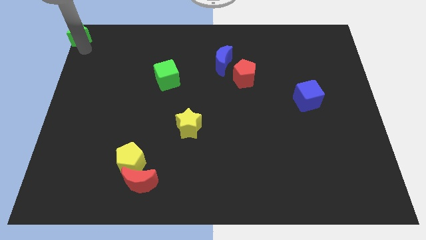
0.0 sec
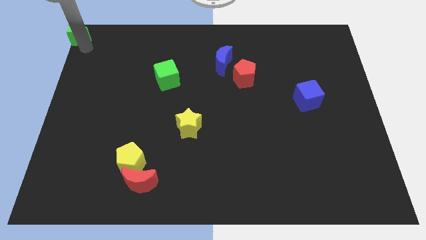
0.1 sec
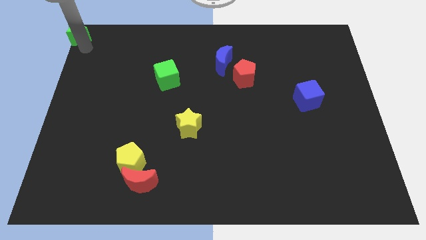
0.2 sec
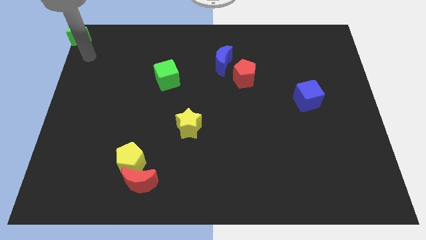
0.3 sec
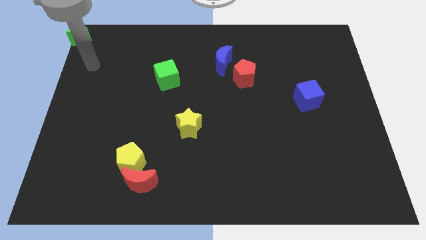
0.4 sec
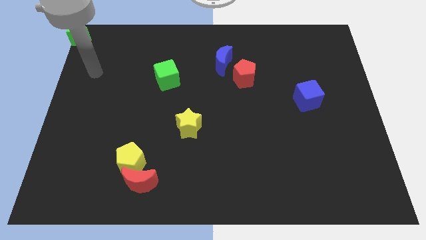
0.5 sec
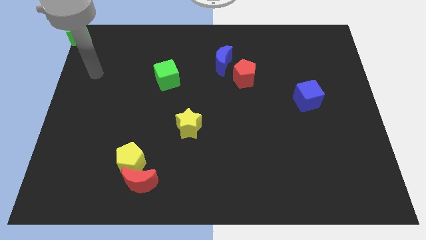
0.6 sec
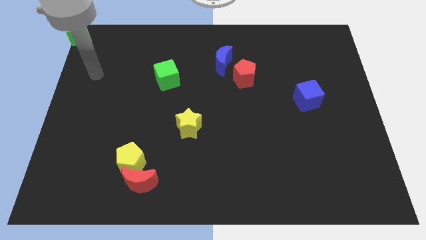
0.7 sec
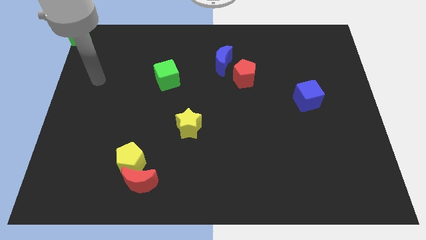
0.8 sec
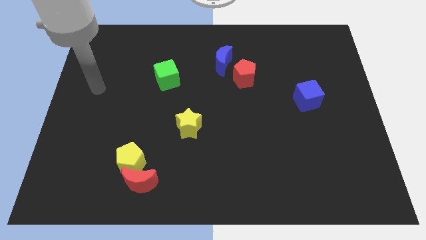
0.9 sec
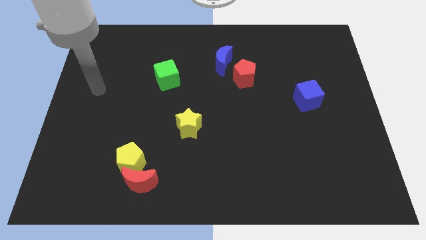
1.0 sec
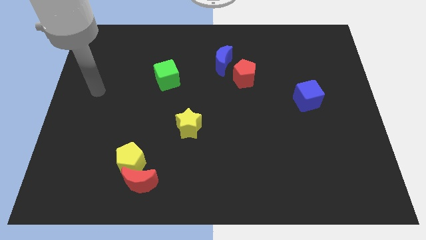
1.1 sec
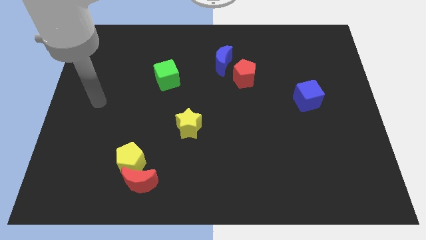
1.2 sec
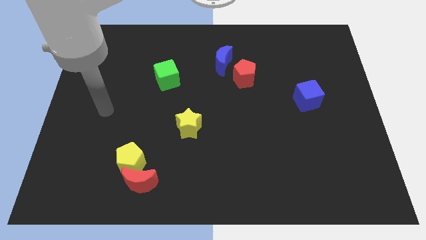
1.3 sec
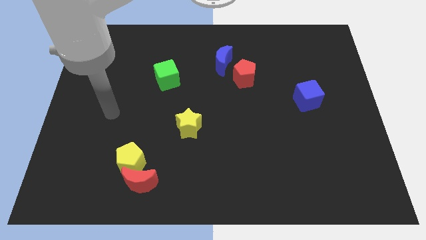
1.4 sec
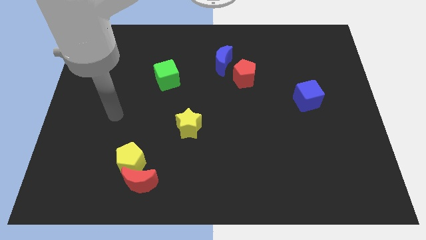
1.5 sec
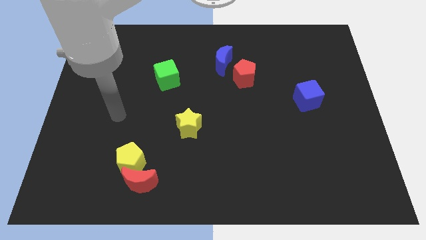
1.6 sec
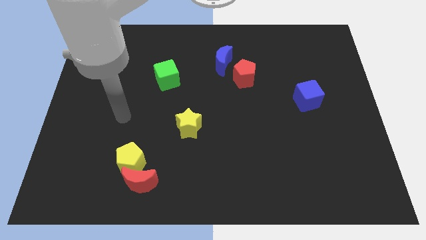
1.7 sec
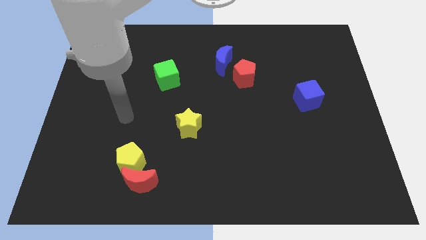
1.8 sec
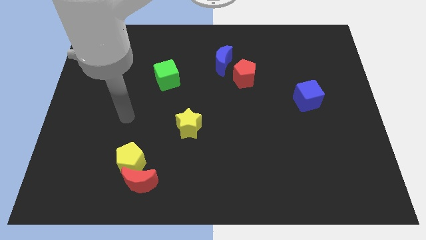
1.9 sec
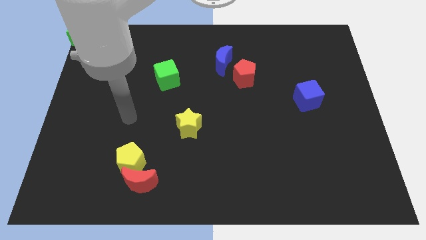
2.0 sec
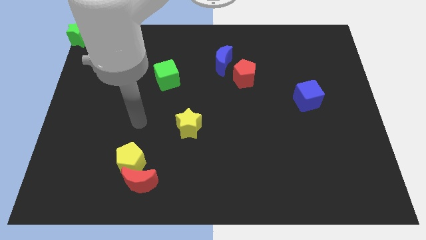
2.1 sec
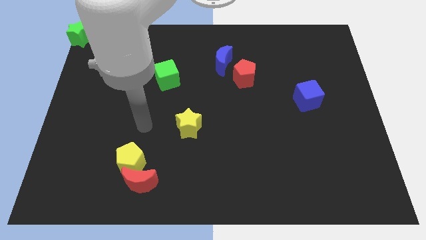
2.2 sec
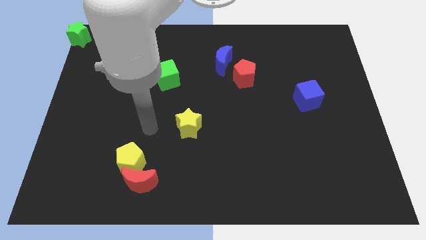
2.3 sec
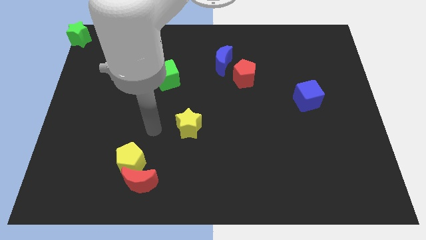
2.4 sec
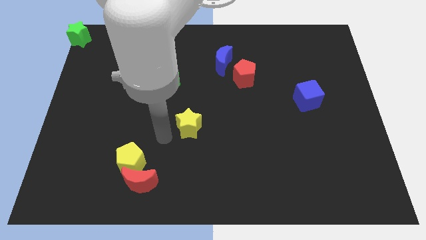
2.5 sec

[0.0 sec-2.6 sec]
place your arm to the left of yellow star

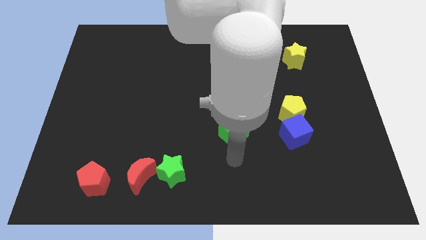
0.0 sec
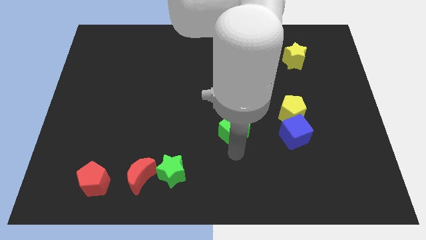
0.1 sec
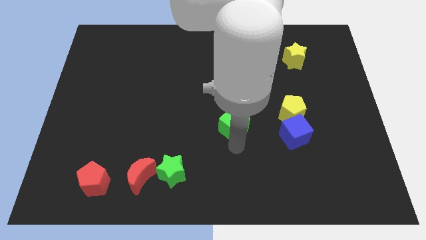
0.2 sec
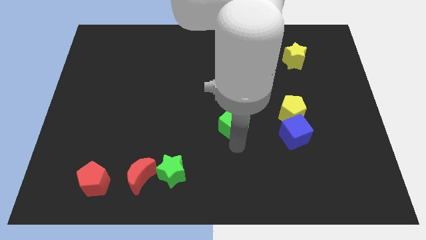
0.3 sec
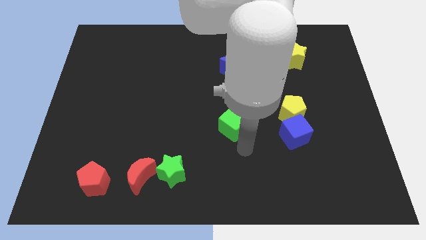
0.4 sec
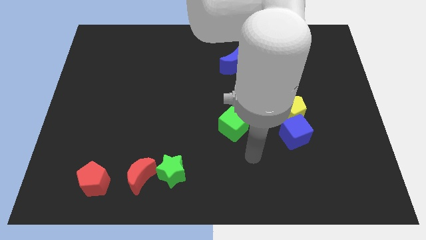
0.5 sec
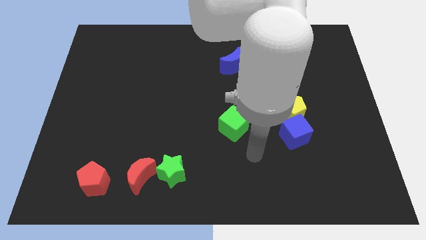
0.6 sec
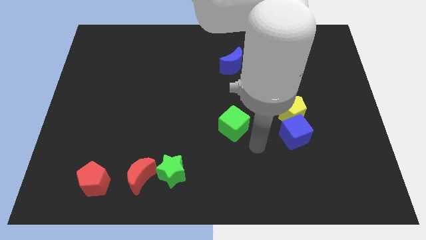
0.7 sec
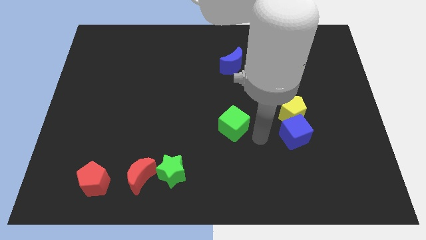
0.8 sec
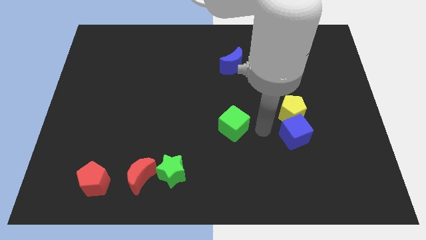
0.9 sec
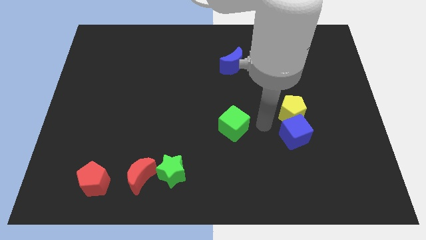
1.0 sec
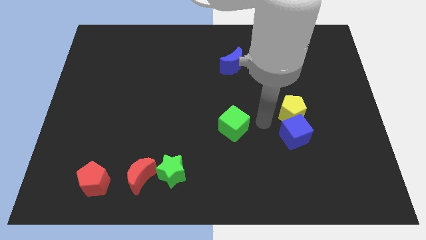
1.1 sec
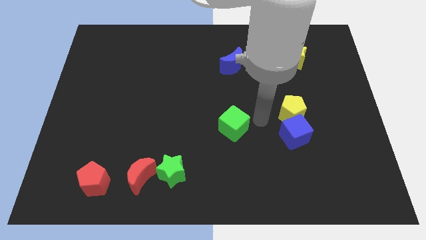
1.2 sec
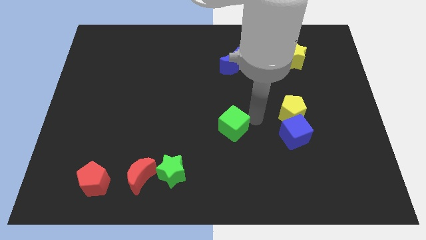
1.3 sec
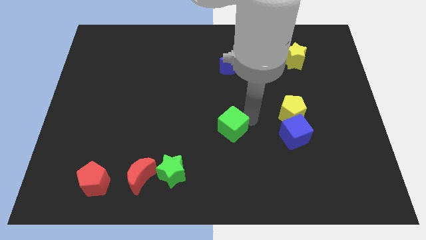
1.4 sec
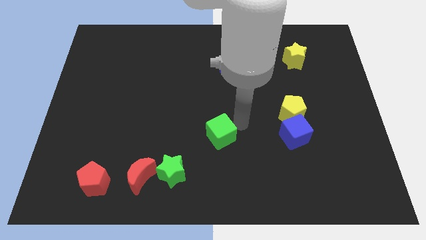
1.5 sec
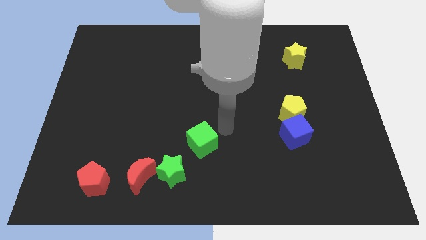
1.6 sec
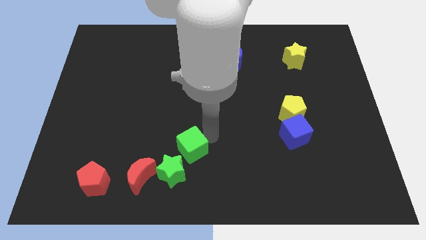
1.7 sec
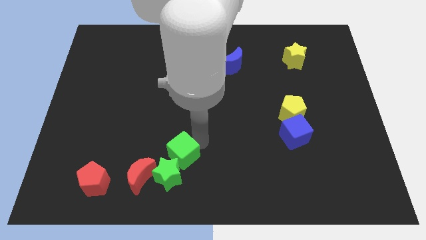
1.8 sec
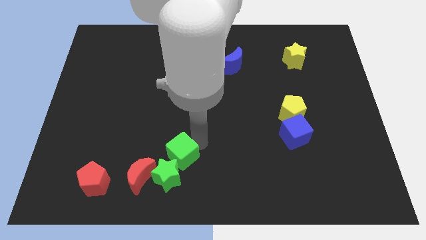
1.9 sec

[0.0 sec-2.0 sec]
move the green cube into the green star

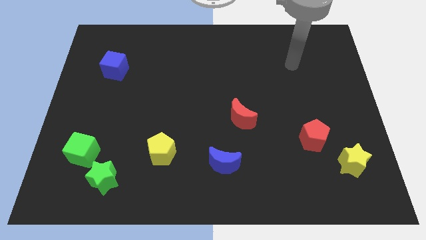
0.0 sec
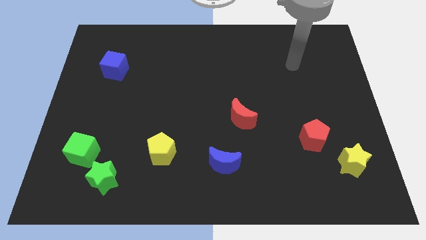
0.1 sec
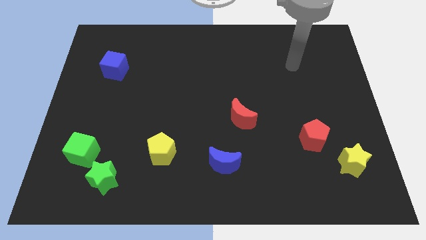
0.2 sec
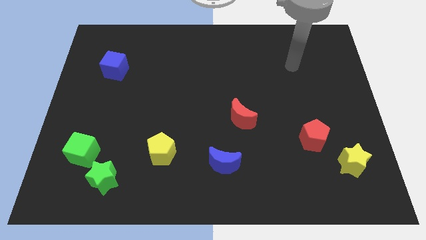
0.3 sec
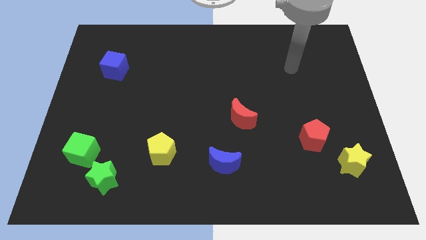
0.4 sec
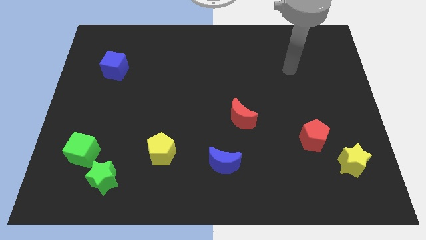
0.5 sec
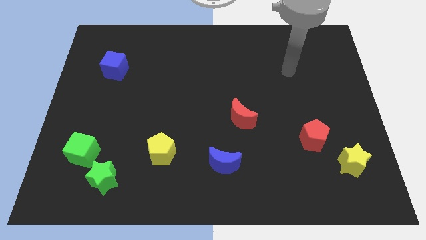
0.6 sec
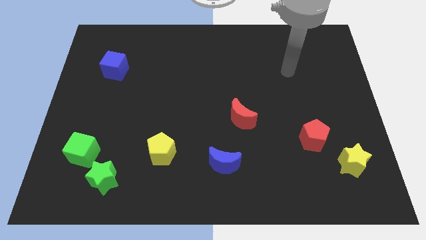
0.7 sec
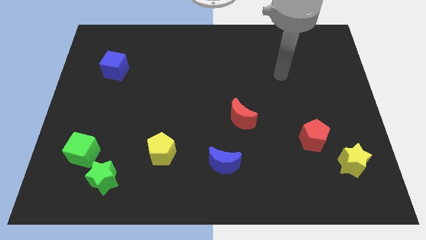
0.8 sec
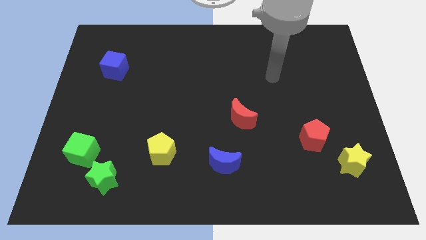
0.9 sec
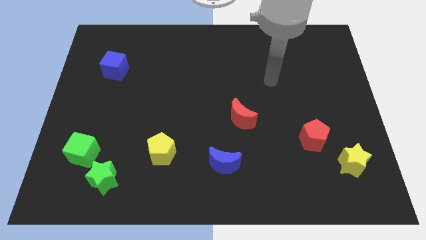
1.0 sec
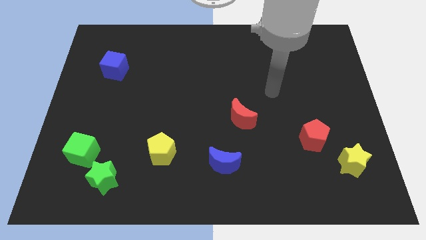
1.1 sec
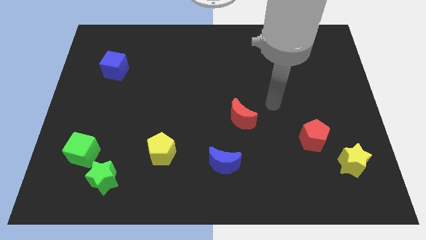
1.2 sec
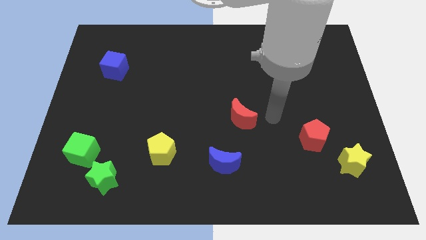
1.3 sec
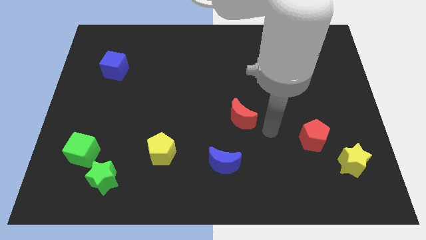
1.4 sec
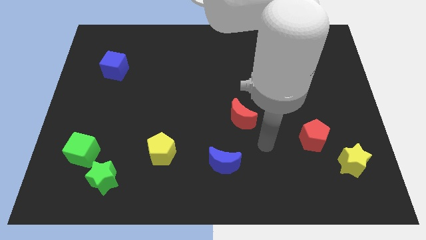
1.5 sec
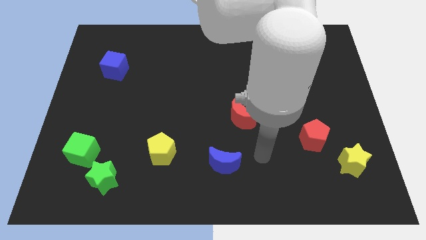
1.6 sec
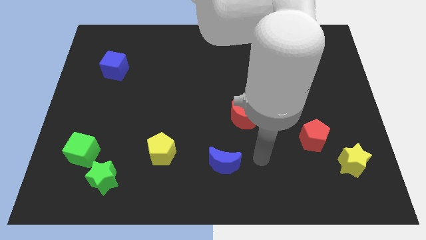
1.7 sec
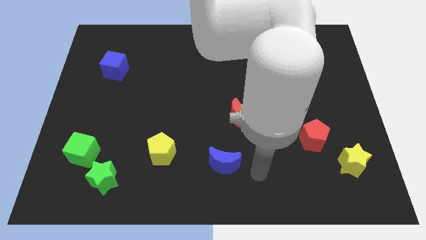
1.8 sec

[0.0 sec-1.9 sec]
move your arm towards the bottom of the board

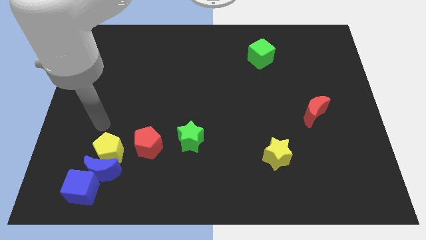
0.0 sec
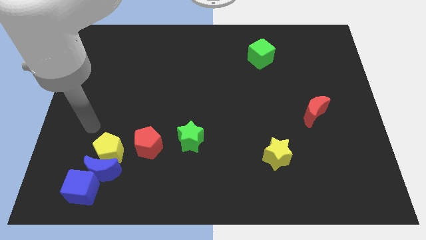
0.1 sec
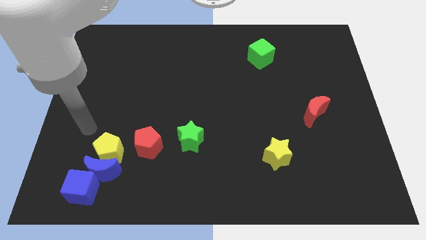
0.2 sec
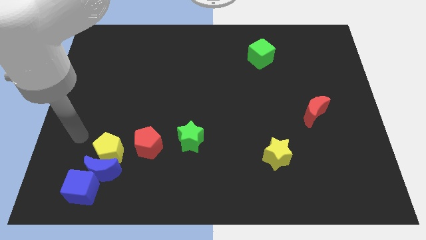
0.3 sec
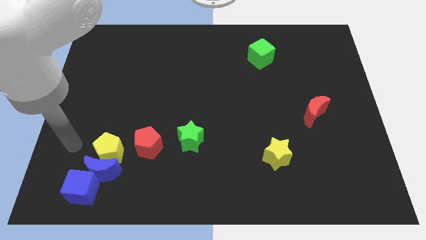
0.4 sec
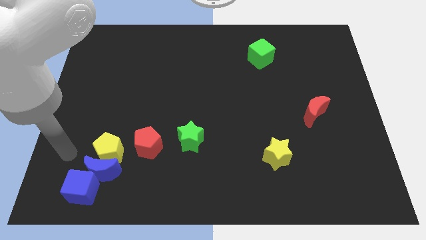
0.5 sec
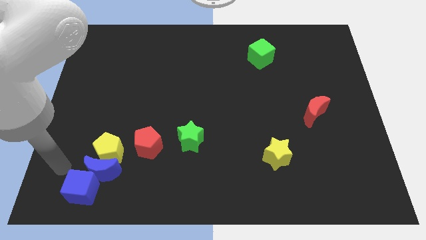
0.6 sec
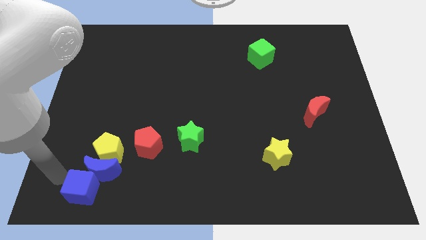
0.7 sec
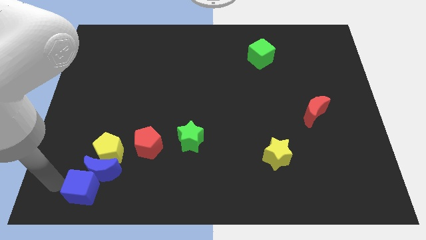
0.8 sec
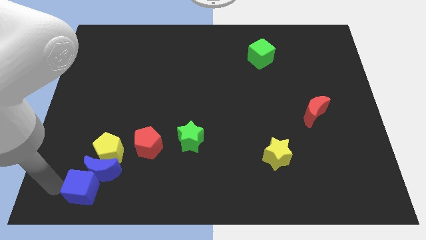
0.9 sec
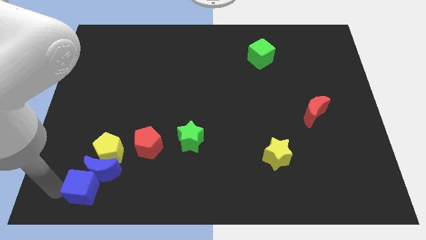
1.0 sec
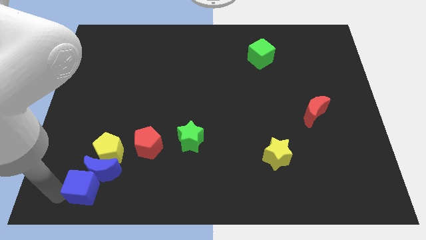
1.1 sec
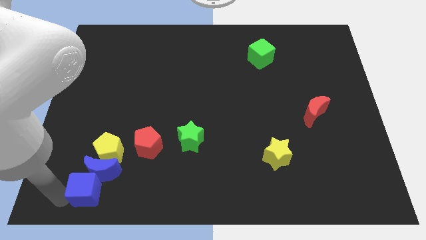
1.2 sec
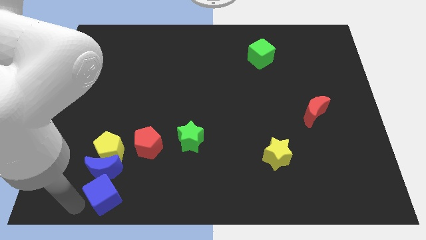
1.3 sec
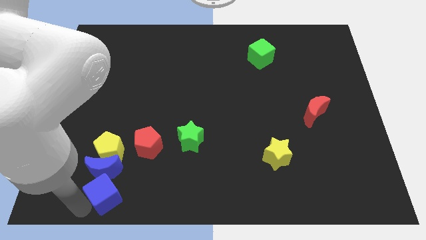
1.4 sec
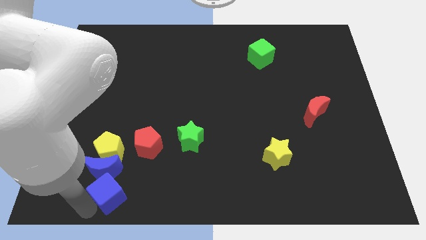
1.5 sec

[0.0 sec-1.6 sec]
push the blue cube slightly to the right

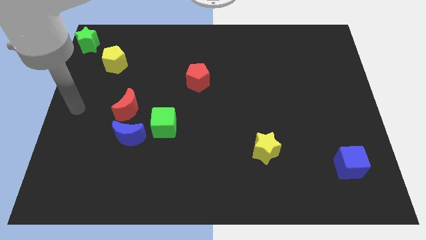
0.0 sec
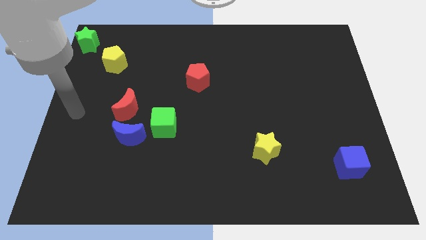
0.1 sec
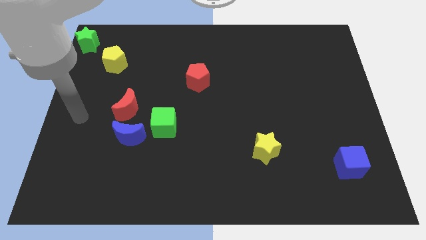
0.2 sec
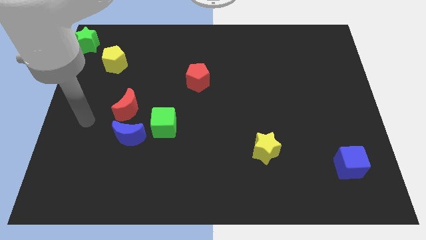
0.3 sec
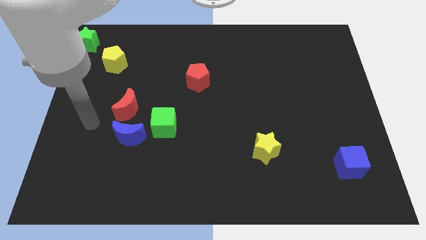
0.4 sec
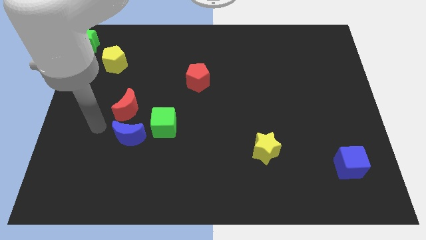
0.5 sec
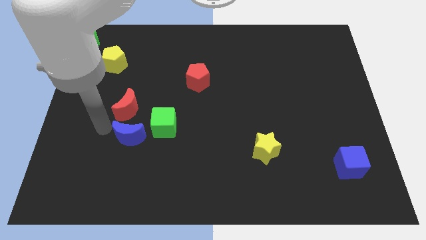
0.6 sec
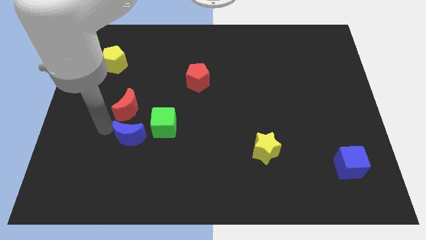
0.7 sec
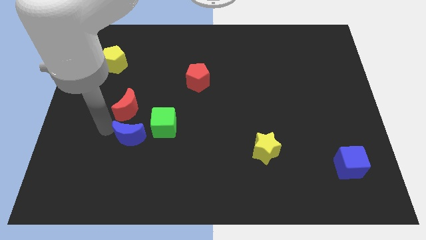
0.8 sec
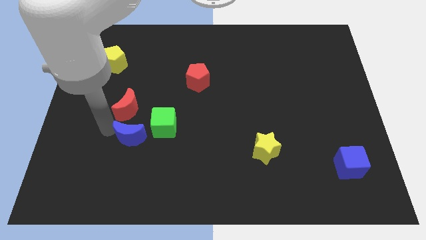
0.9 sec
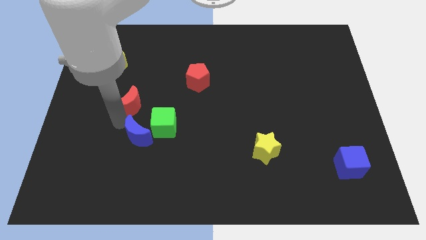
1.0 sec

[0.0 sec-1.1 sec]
touch the blue crescent with the arm
